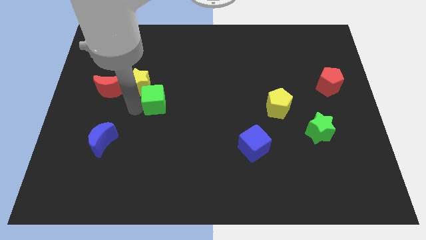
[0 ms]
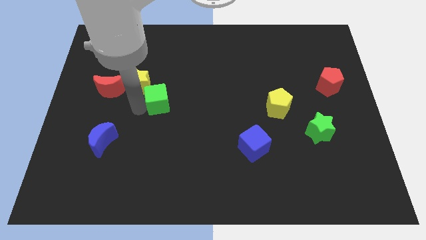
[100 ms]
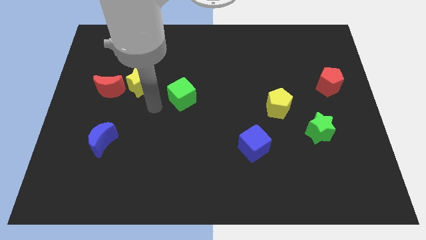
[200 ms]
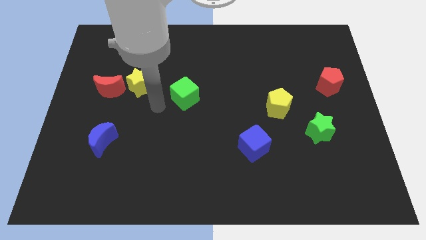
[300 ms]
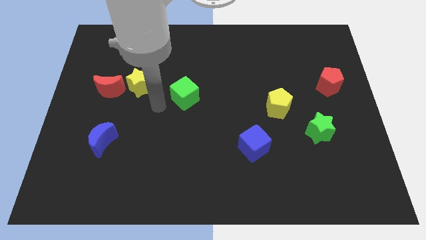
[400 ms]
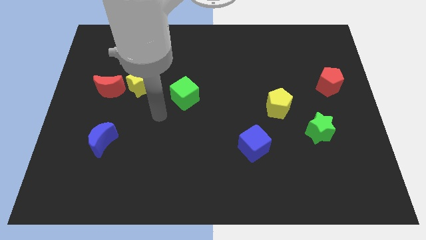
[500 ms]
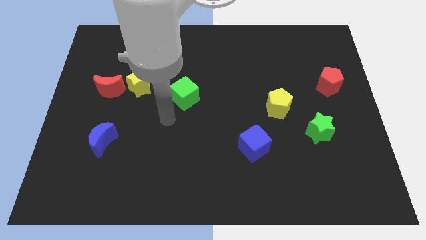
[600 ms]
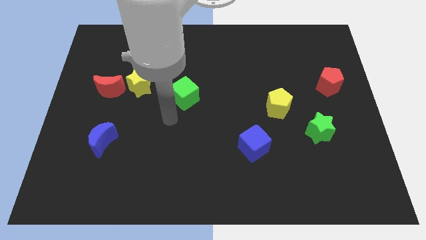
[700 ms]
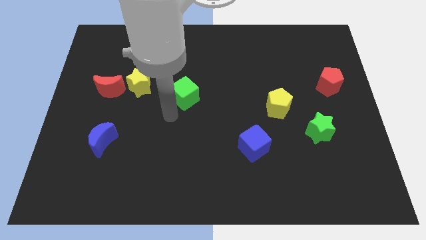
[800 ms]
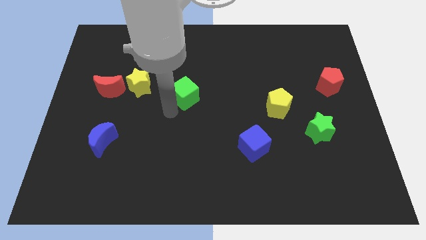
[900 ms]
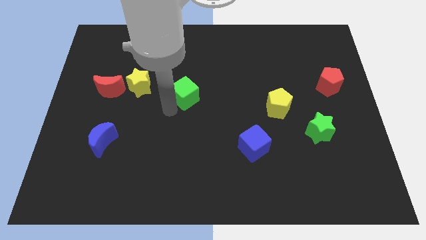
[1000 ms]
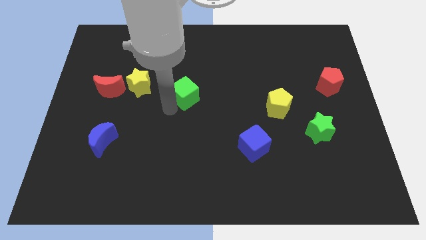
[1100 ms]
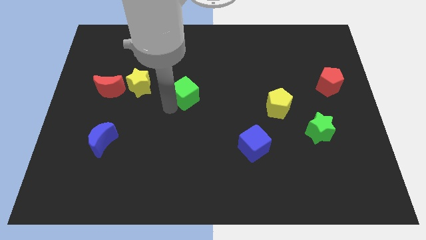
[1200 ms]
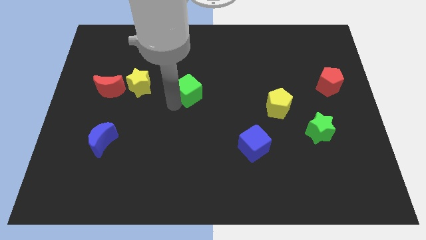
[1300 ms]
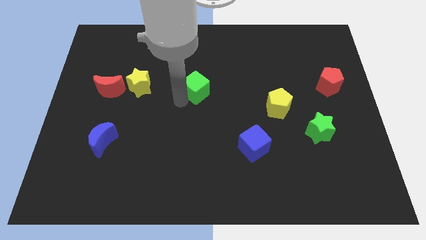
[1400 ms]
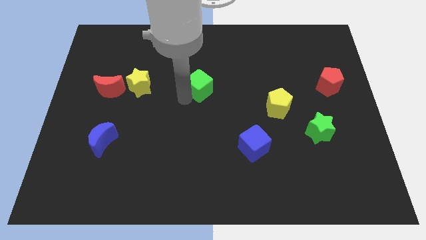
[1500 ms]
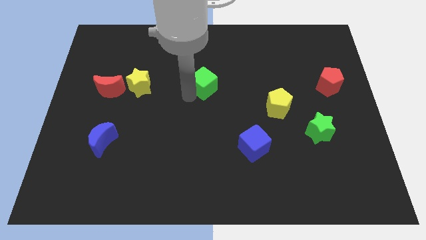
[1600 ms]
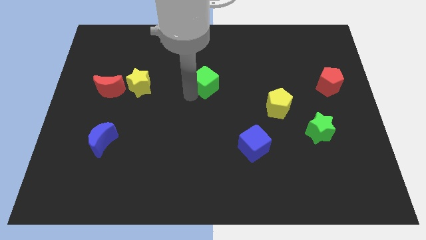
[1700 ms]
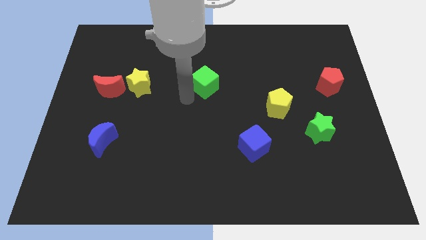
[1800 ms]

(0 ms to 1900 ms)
move the green cube to the center of the board

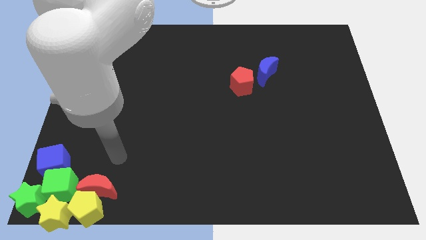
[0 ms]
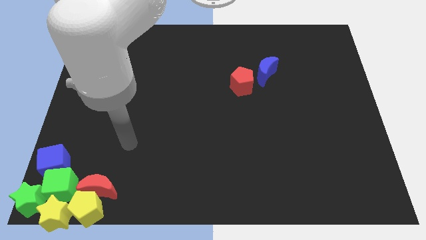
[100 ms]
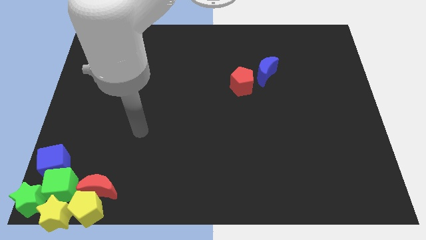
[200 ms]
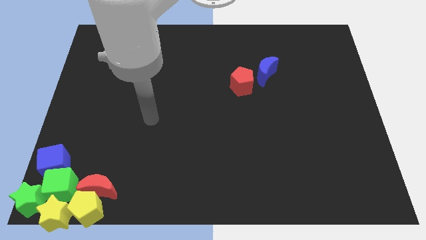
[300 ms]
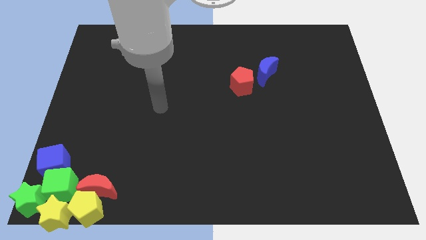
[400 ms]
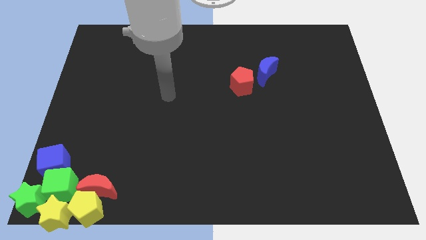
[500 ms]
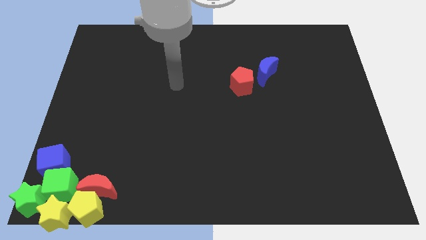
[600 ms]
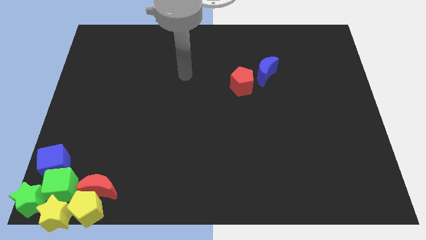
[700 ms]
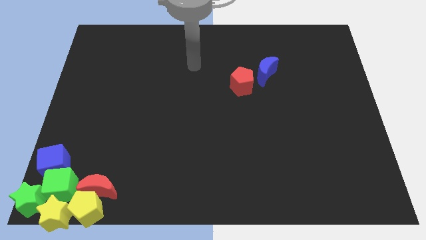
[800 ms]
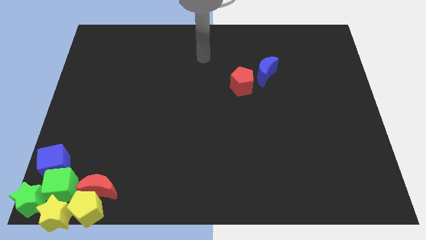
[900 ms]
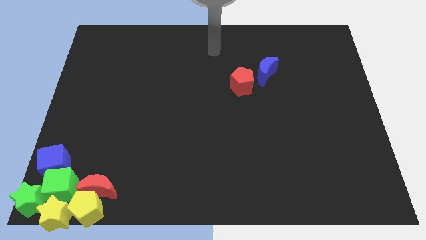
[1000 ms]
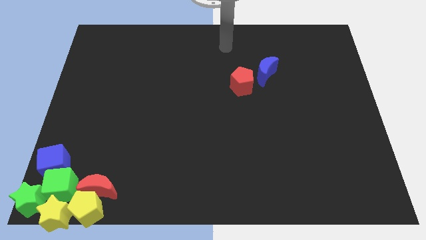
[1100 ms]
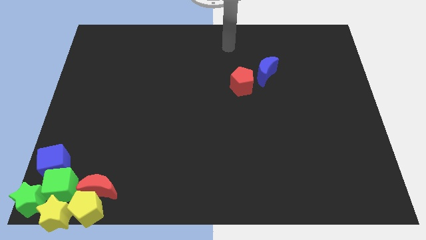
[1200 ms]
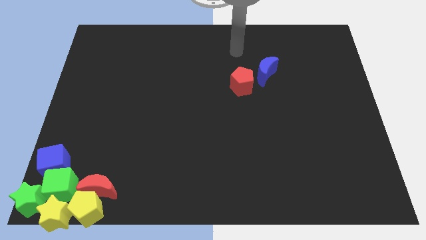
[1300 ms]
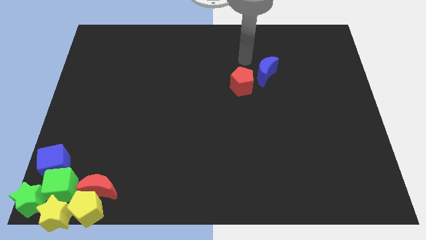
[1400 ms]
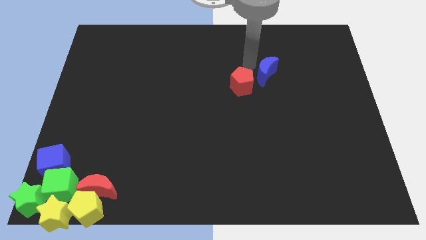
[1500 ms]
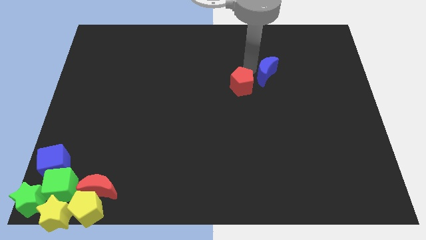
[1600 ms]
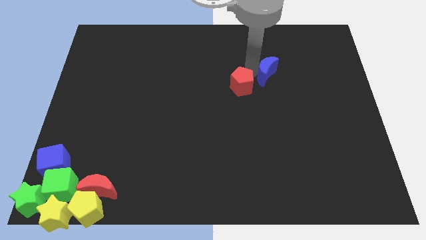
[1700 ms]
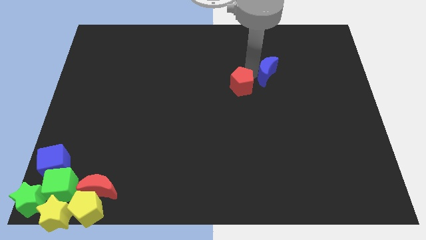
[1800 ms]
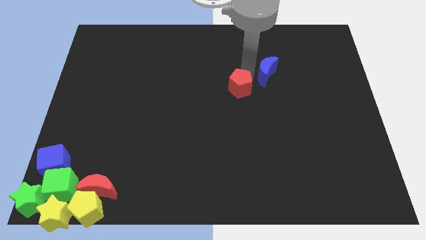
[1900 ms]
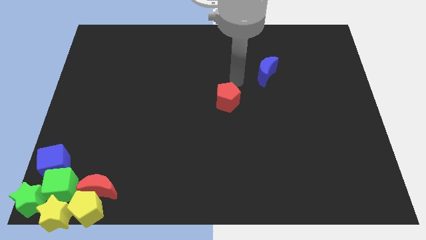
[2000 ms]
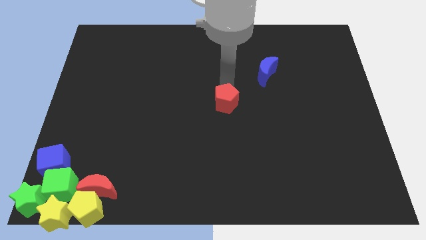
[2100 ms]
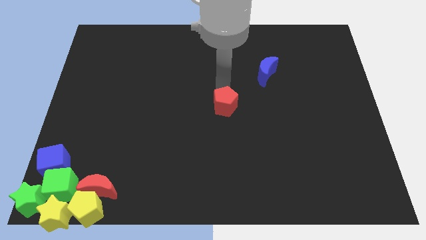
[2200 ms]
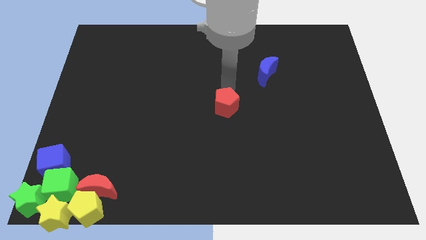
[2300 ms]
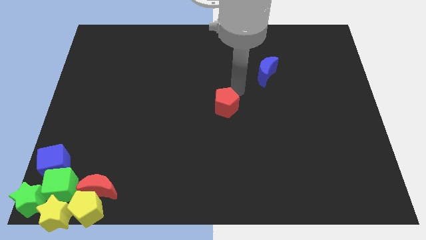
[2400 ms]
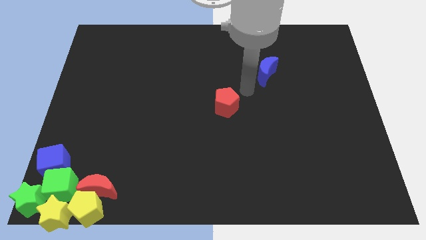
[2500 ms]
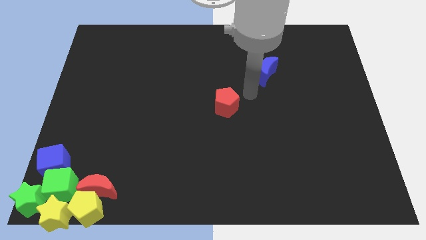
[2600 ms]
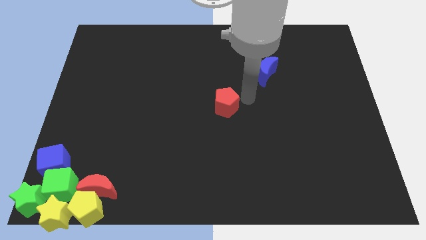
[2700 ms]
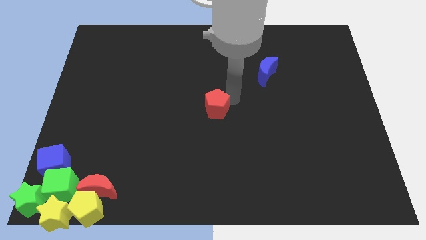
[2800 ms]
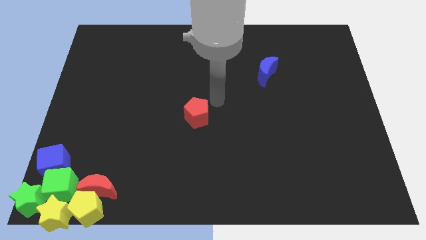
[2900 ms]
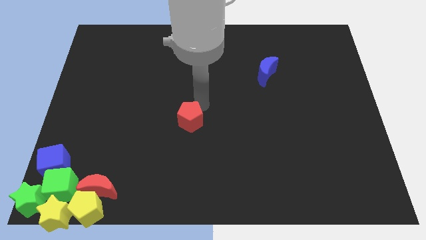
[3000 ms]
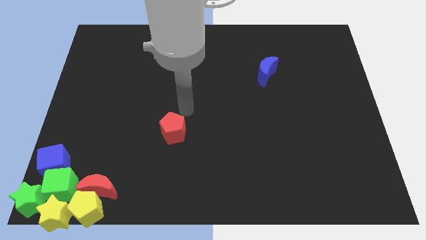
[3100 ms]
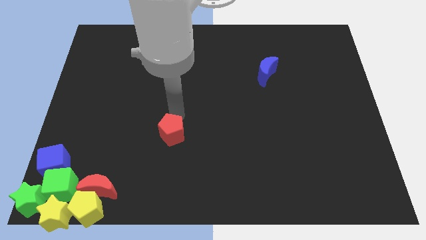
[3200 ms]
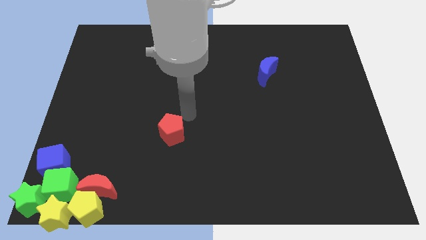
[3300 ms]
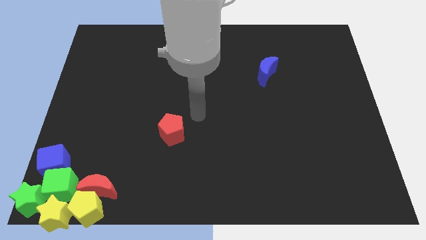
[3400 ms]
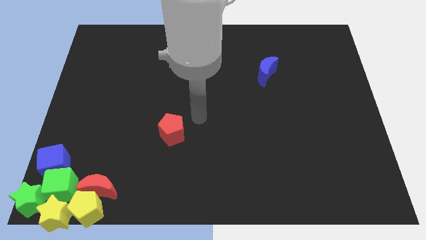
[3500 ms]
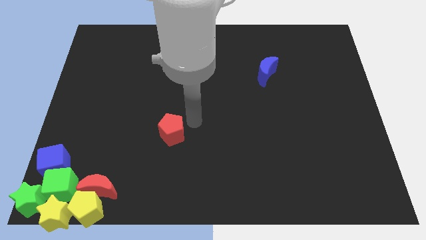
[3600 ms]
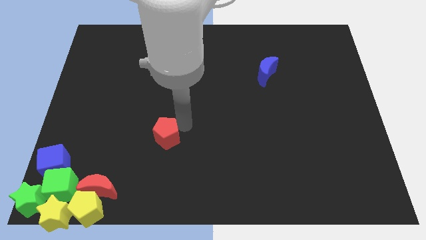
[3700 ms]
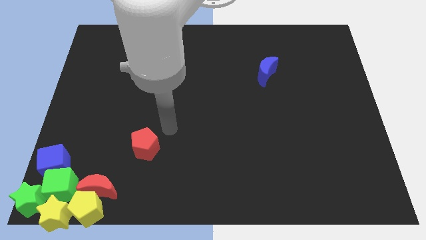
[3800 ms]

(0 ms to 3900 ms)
separate the red pentagon from the blue moon

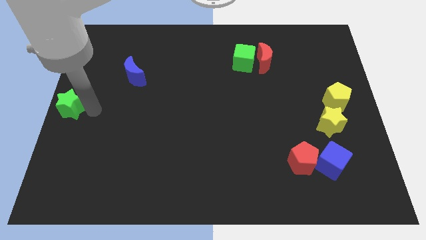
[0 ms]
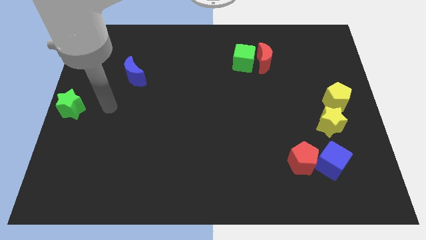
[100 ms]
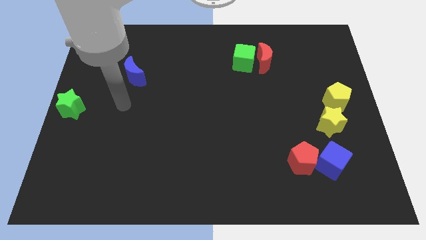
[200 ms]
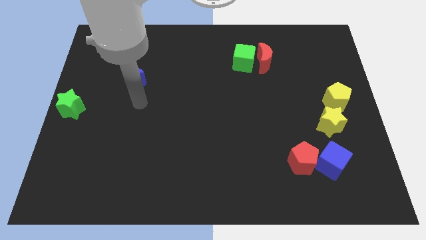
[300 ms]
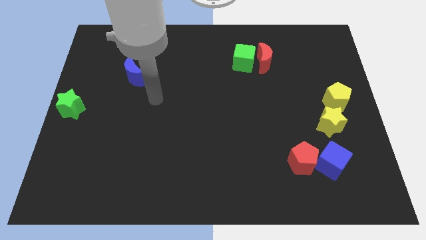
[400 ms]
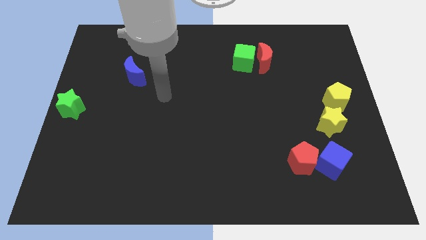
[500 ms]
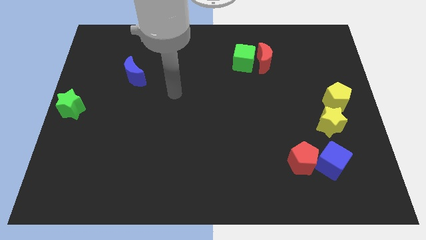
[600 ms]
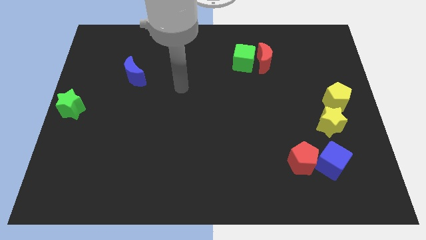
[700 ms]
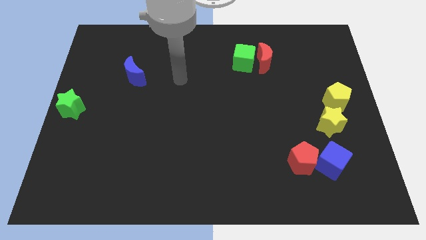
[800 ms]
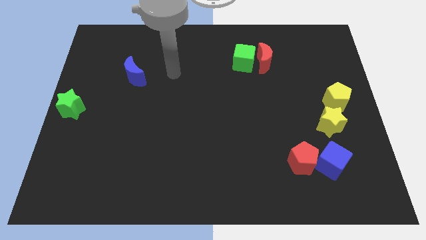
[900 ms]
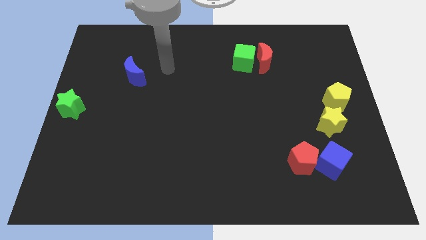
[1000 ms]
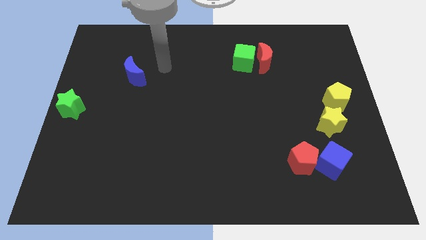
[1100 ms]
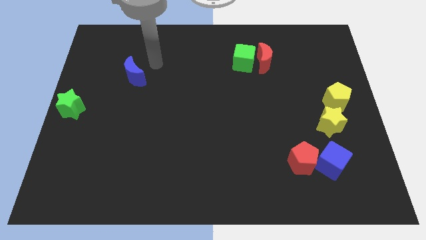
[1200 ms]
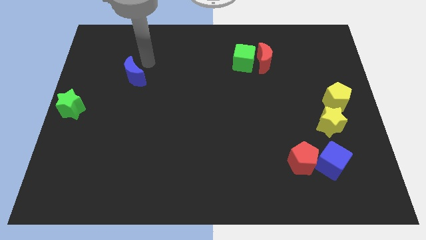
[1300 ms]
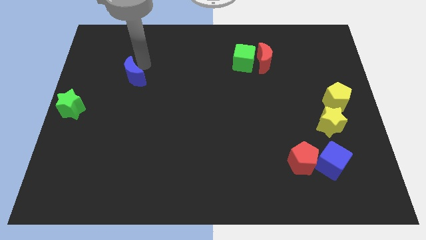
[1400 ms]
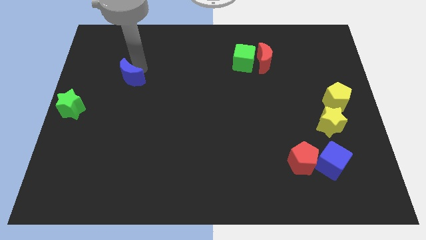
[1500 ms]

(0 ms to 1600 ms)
move the arm to the top left of the board

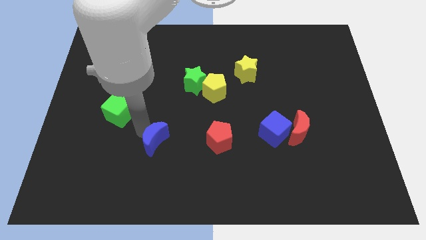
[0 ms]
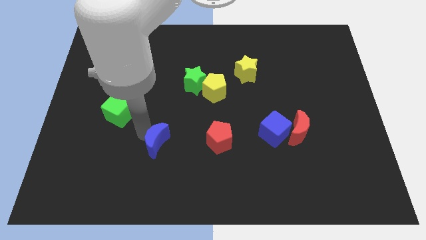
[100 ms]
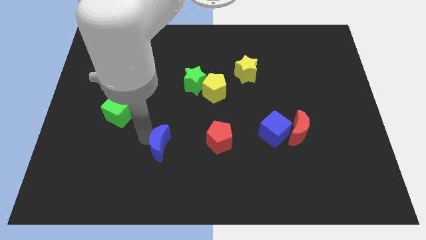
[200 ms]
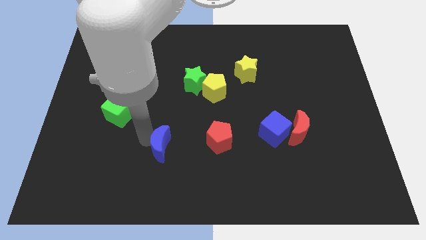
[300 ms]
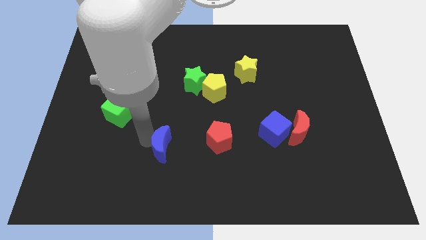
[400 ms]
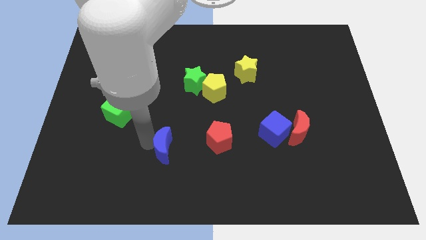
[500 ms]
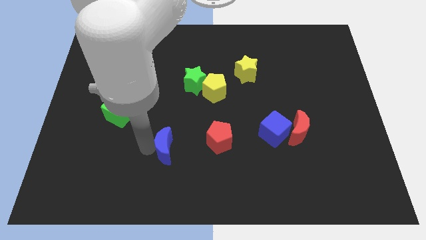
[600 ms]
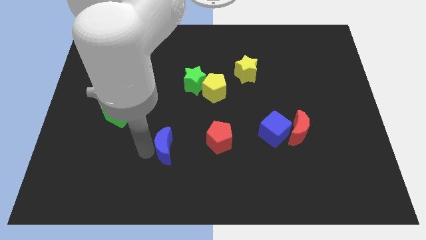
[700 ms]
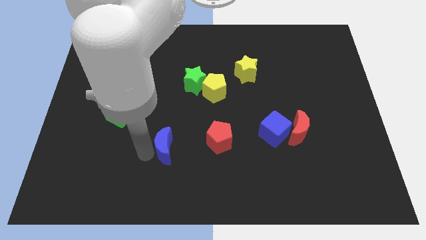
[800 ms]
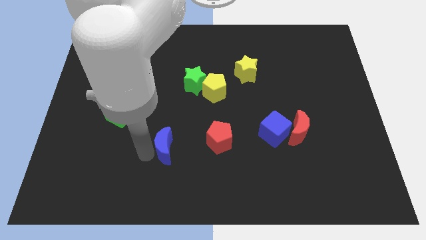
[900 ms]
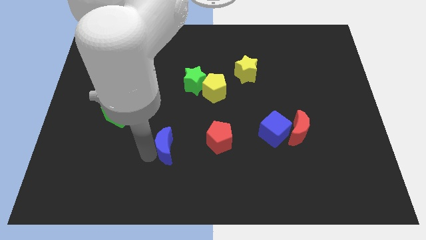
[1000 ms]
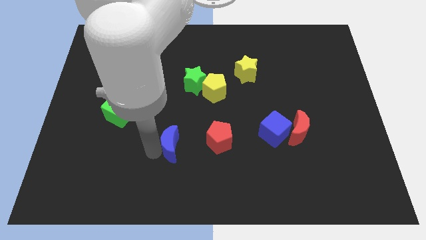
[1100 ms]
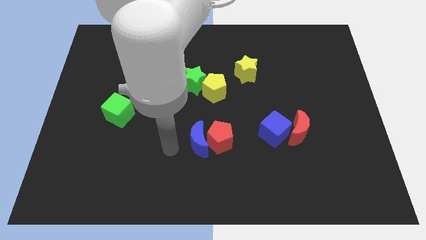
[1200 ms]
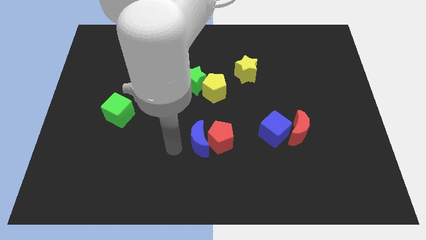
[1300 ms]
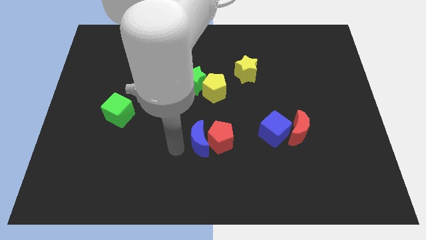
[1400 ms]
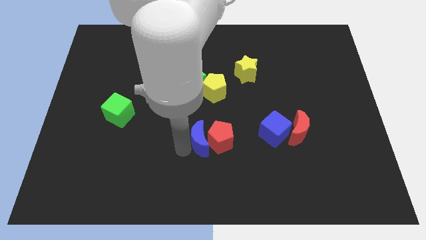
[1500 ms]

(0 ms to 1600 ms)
place blue crescent near red pentagon
